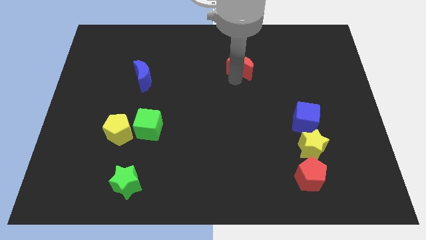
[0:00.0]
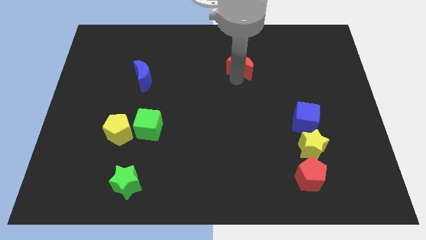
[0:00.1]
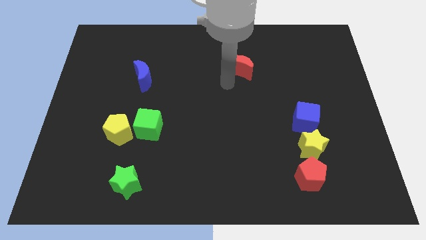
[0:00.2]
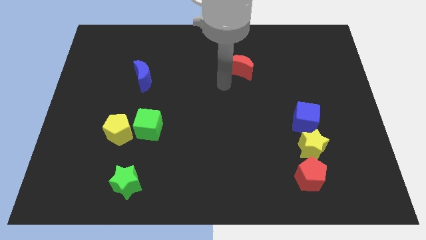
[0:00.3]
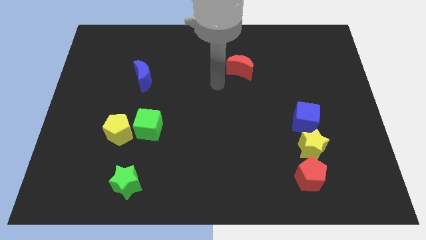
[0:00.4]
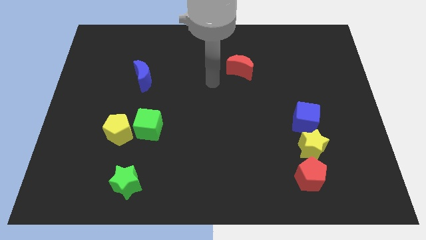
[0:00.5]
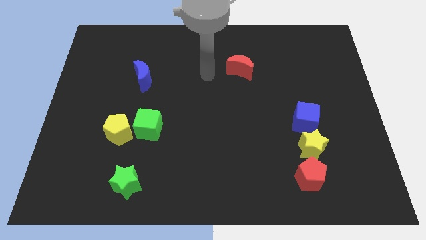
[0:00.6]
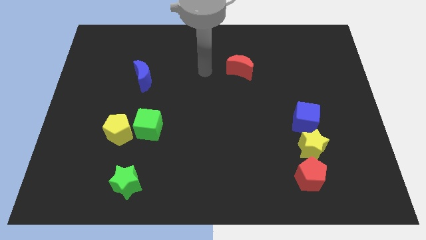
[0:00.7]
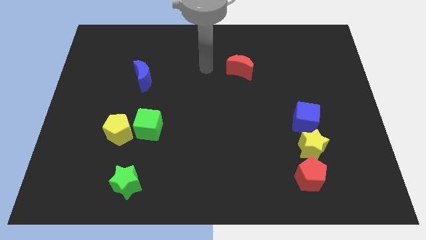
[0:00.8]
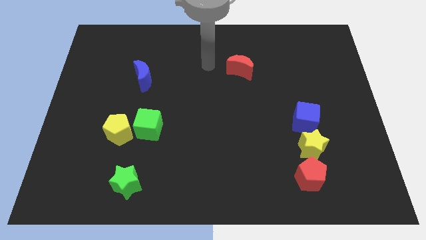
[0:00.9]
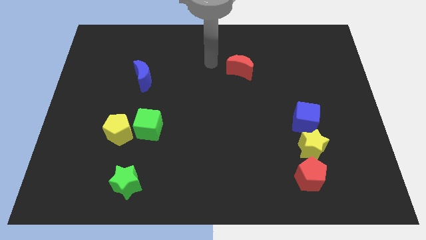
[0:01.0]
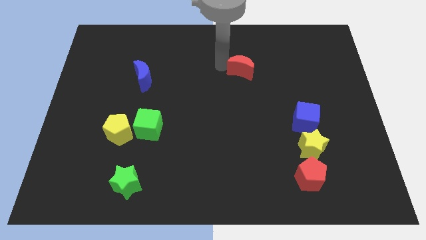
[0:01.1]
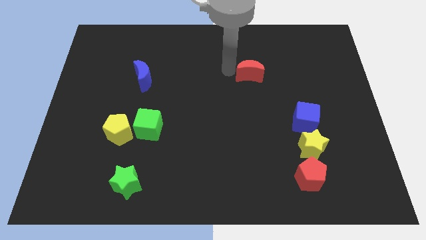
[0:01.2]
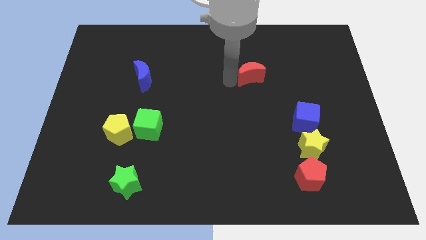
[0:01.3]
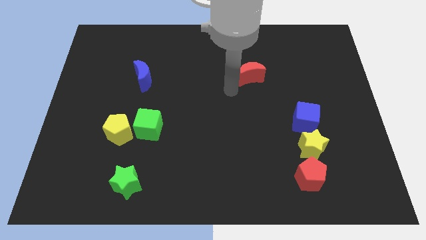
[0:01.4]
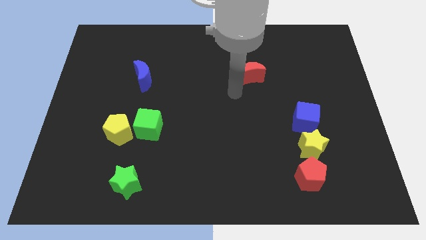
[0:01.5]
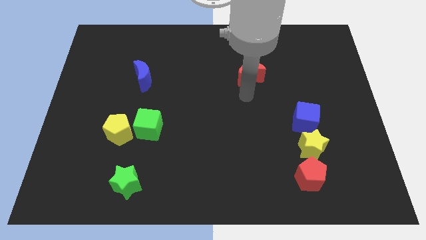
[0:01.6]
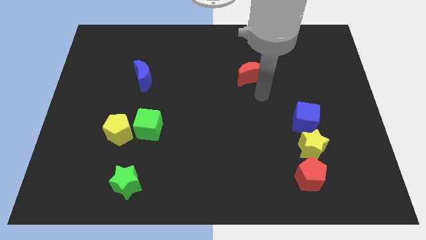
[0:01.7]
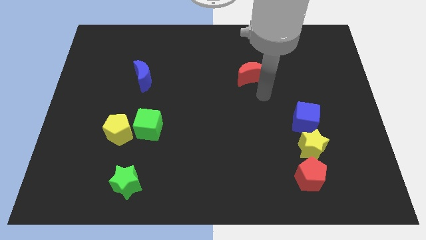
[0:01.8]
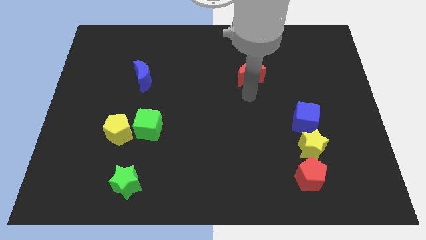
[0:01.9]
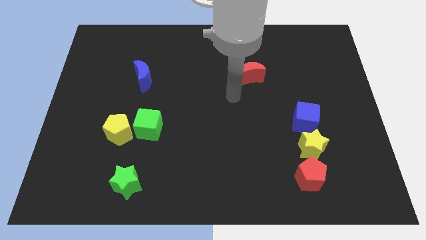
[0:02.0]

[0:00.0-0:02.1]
tap on the left side of the moon

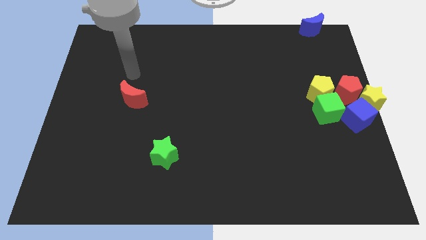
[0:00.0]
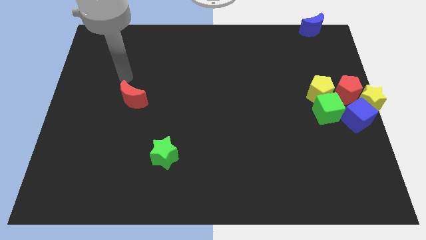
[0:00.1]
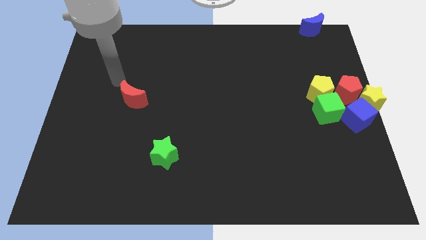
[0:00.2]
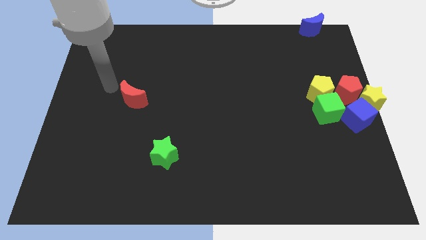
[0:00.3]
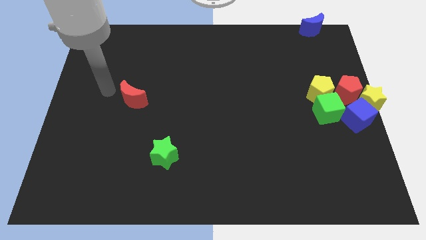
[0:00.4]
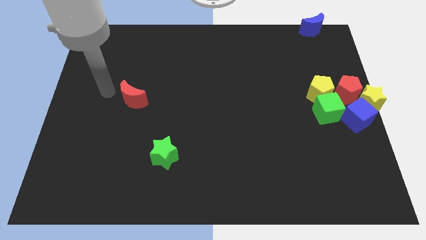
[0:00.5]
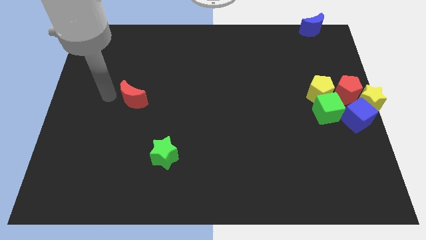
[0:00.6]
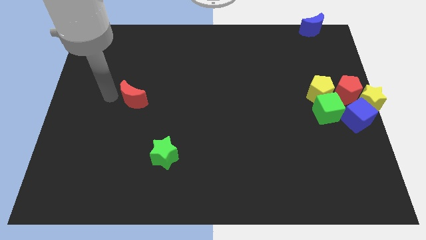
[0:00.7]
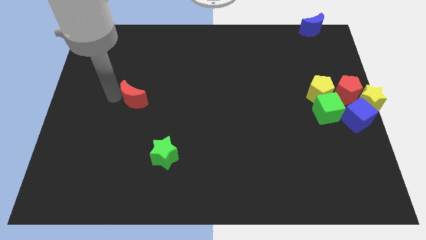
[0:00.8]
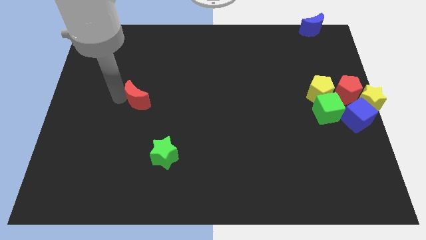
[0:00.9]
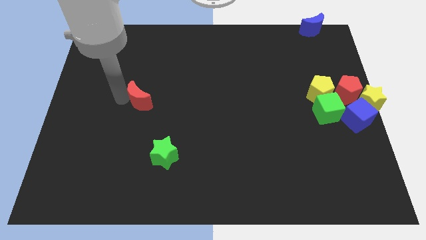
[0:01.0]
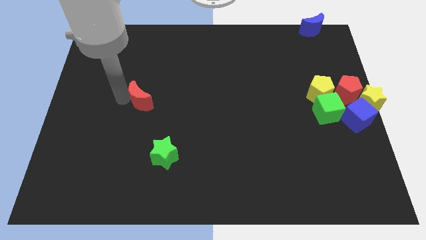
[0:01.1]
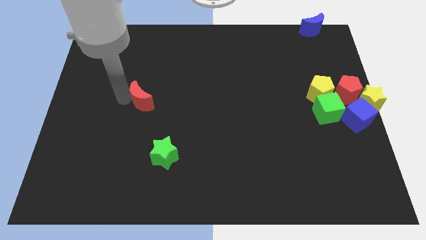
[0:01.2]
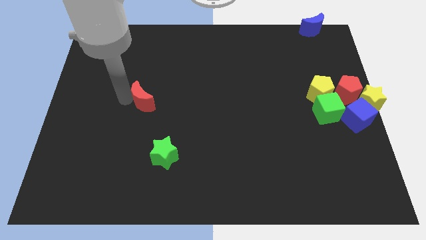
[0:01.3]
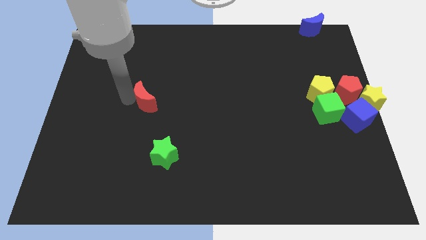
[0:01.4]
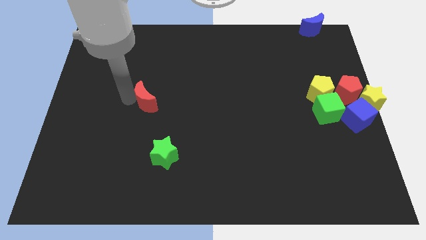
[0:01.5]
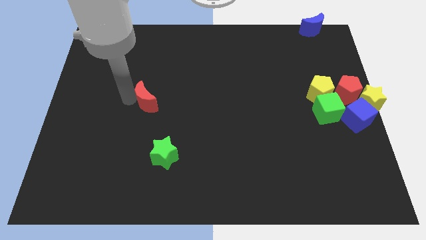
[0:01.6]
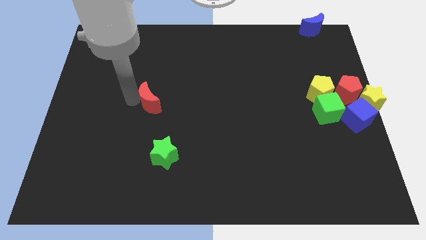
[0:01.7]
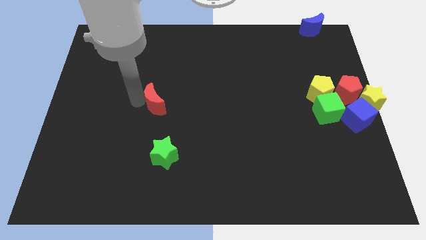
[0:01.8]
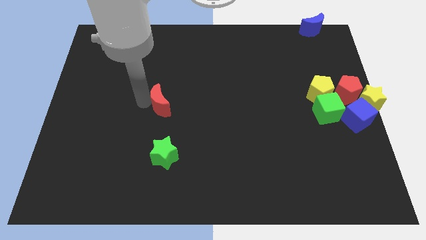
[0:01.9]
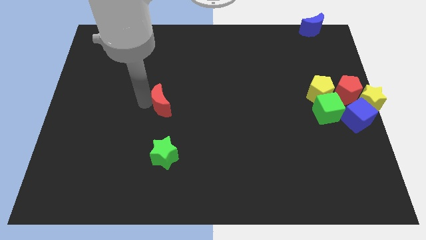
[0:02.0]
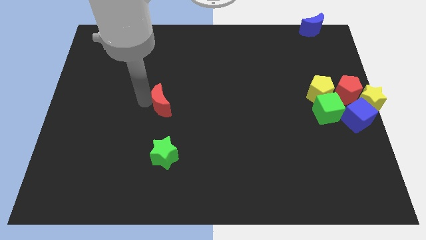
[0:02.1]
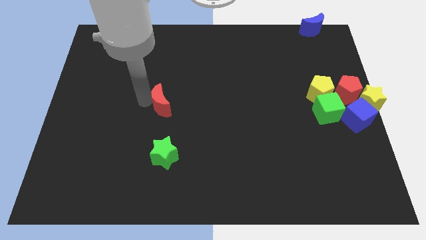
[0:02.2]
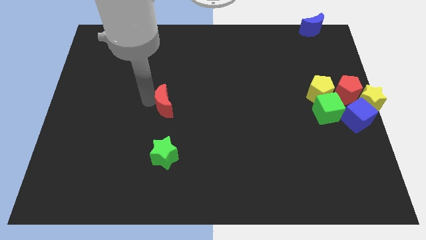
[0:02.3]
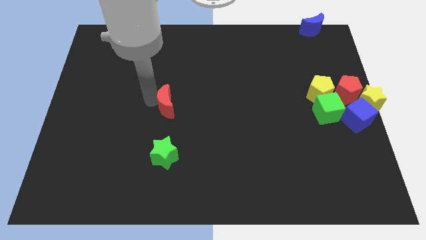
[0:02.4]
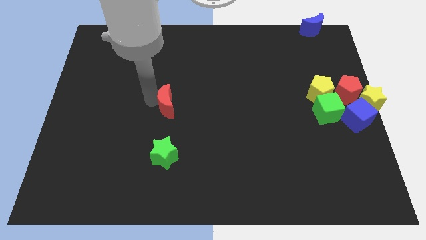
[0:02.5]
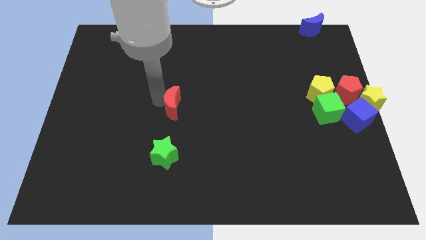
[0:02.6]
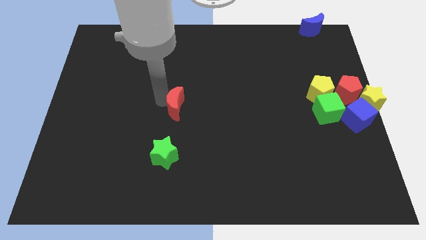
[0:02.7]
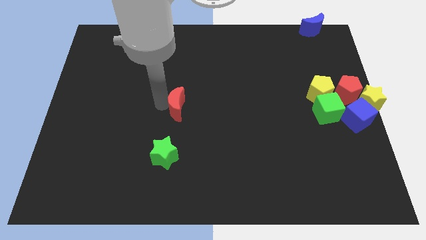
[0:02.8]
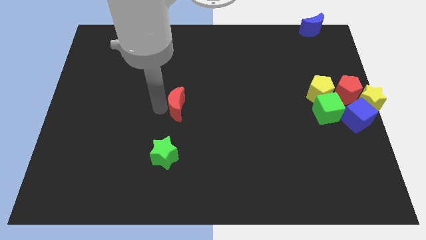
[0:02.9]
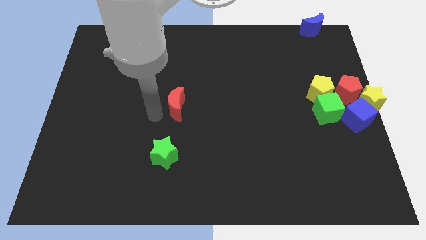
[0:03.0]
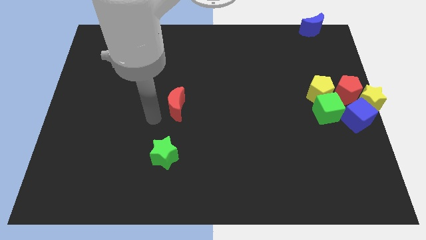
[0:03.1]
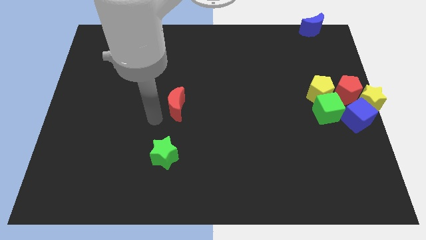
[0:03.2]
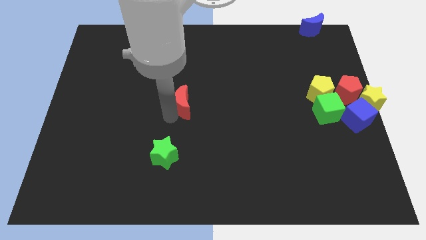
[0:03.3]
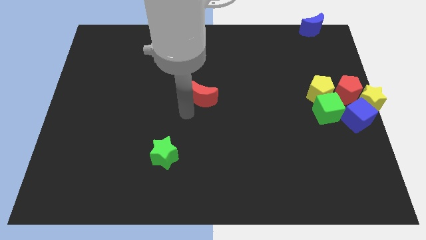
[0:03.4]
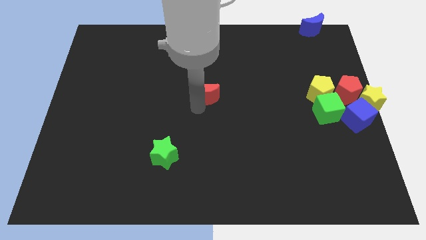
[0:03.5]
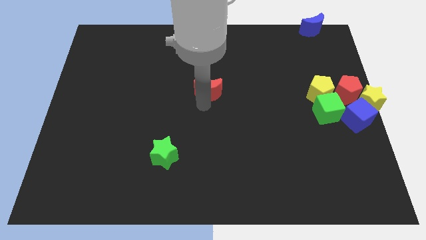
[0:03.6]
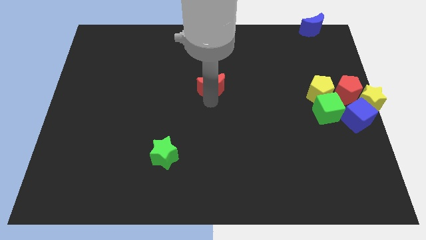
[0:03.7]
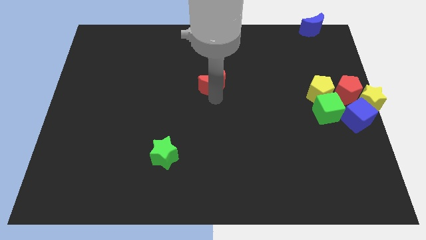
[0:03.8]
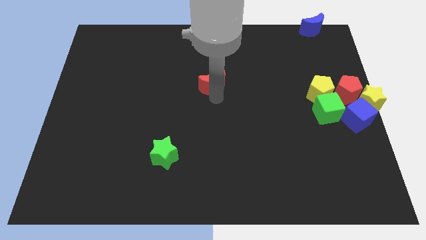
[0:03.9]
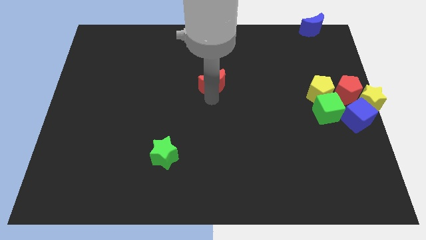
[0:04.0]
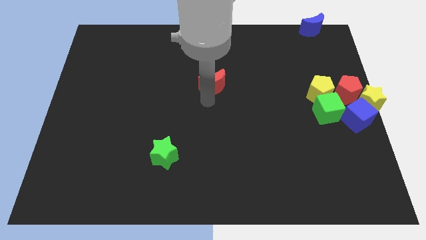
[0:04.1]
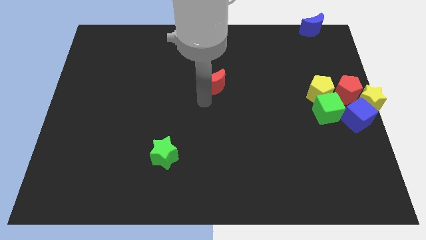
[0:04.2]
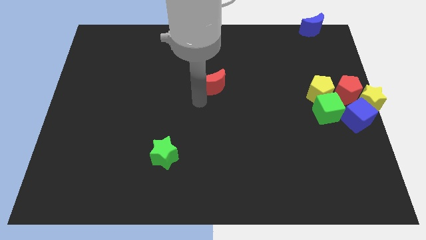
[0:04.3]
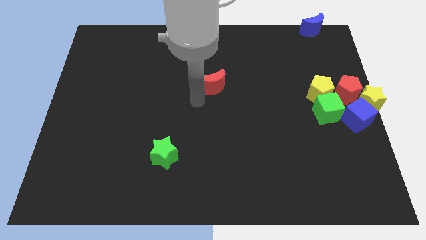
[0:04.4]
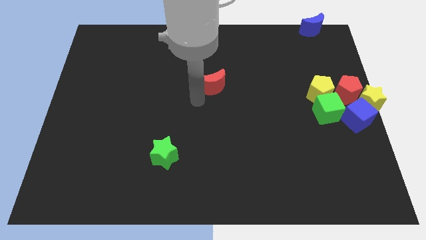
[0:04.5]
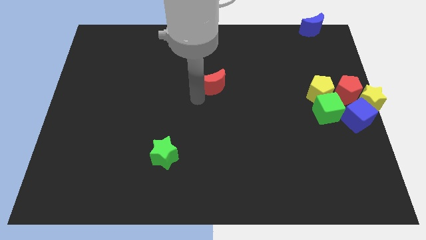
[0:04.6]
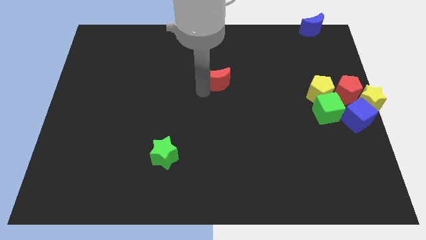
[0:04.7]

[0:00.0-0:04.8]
push the red crescent towards the center of the board

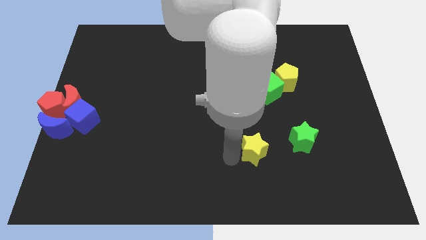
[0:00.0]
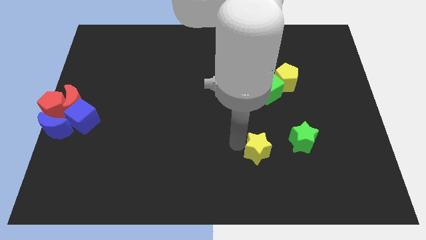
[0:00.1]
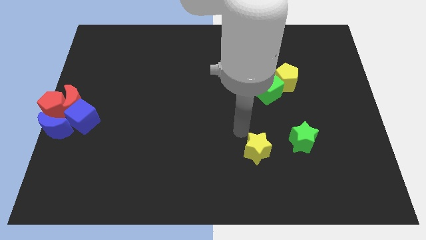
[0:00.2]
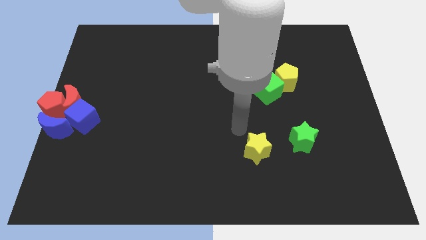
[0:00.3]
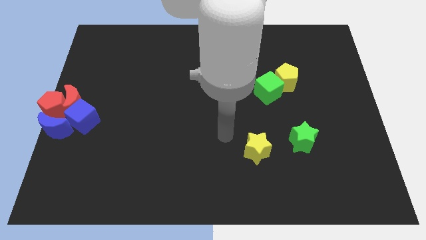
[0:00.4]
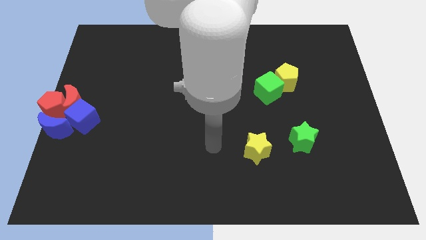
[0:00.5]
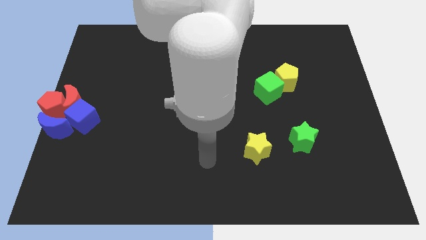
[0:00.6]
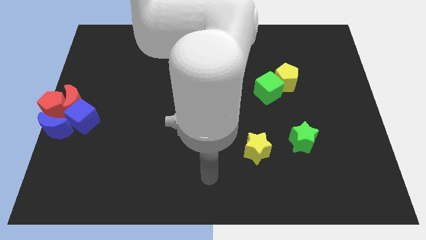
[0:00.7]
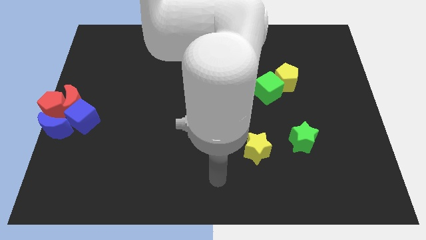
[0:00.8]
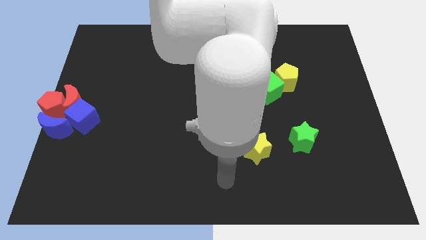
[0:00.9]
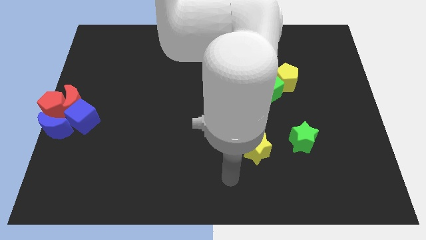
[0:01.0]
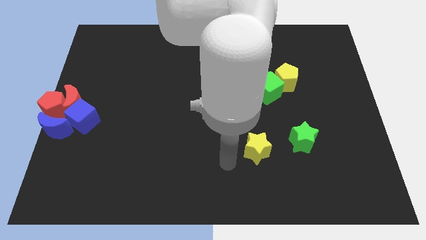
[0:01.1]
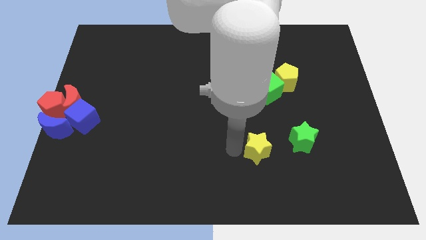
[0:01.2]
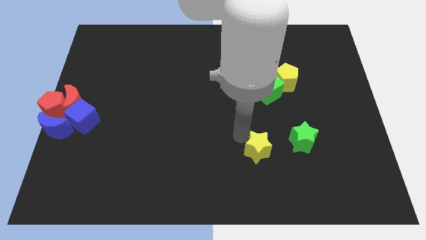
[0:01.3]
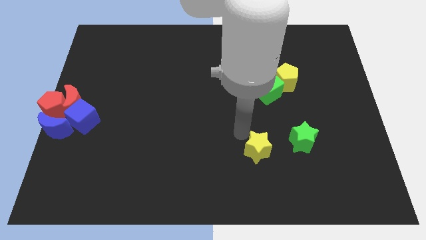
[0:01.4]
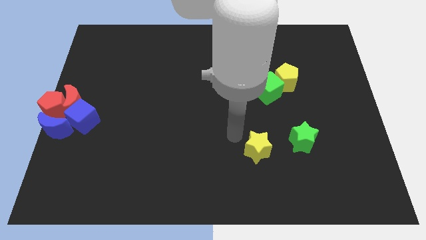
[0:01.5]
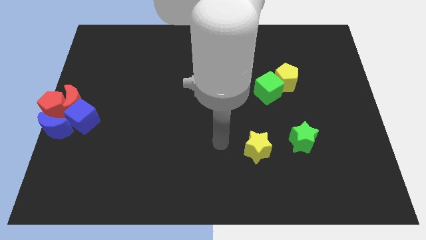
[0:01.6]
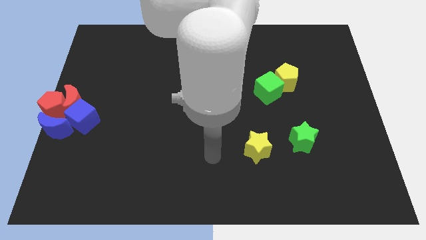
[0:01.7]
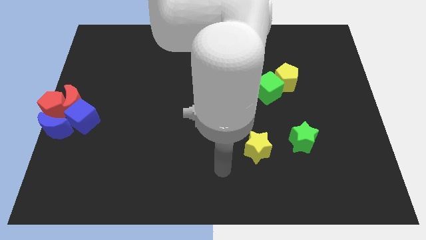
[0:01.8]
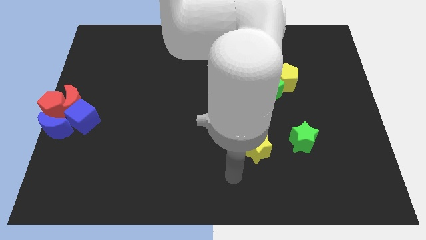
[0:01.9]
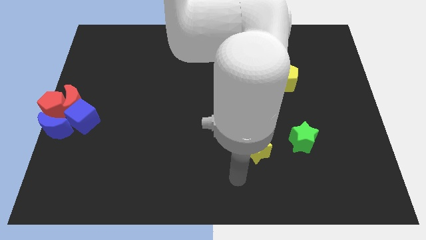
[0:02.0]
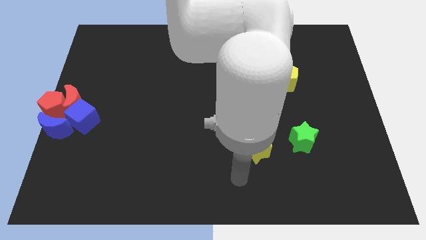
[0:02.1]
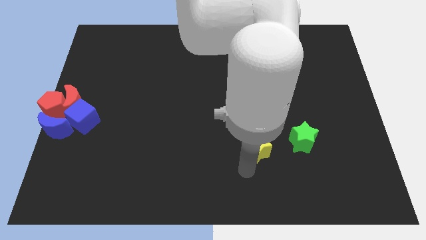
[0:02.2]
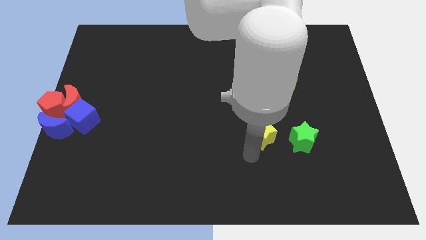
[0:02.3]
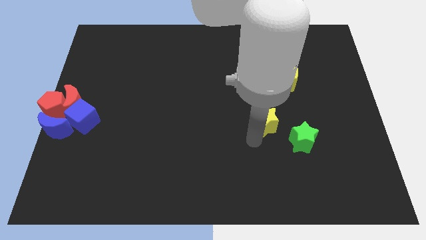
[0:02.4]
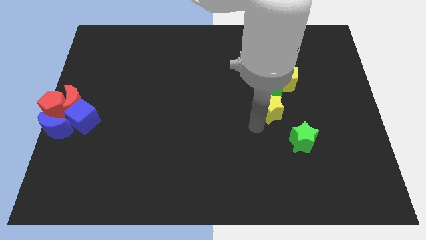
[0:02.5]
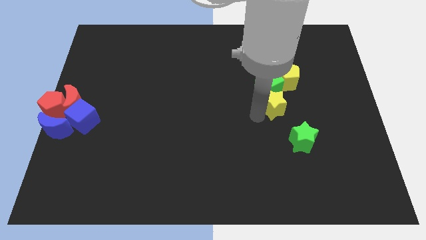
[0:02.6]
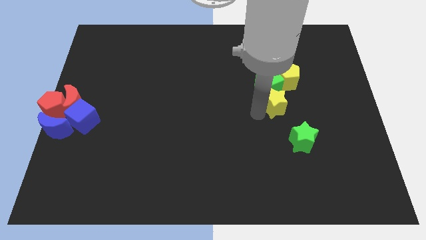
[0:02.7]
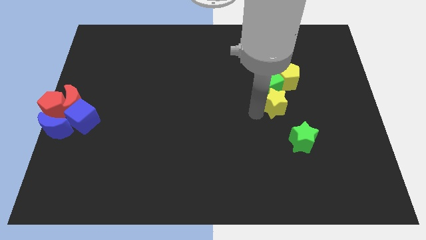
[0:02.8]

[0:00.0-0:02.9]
push yellow star into green cube
